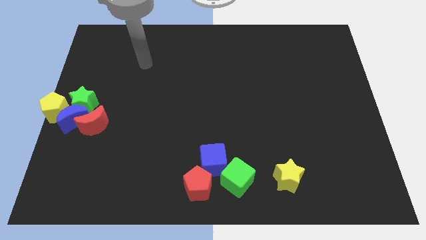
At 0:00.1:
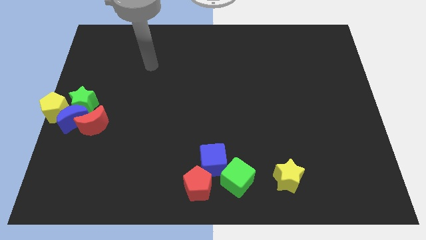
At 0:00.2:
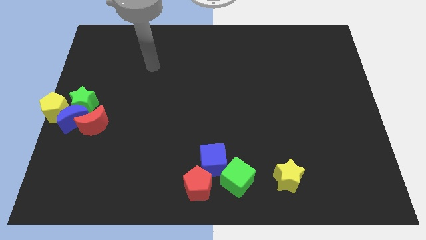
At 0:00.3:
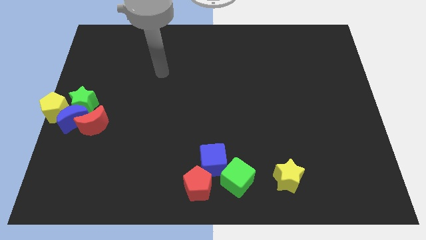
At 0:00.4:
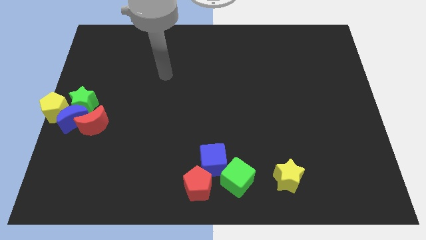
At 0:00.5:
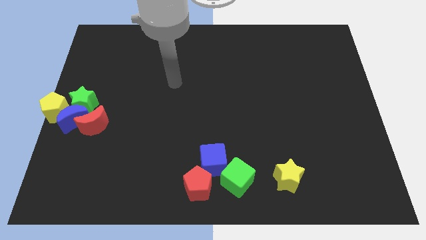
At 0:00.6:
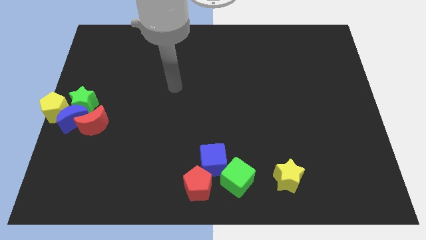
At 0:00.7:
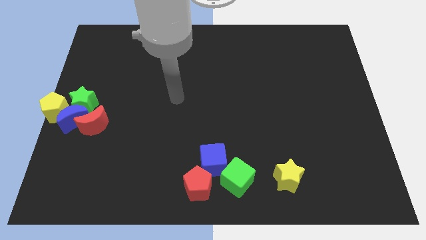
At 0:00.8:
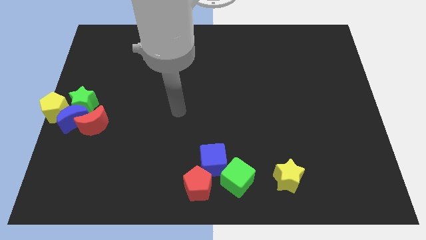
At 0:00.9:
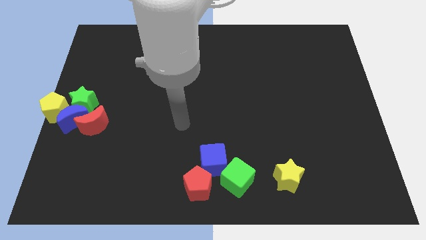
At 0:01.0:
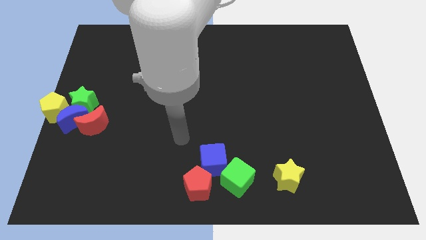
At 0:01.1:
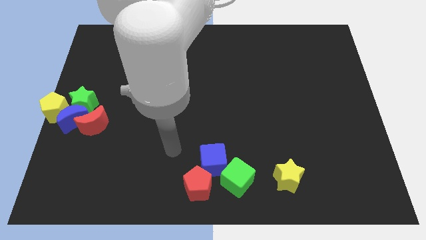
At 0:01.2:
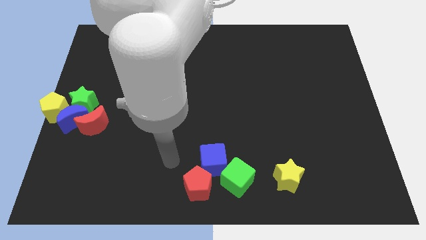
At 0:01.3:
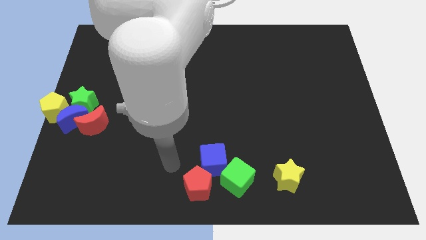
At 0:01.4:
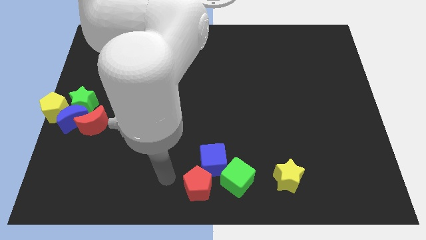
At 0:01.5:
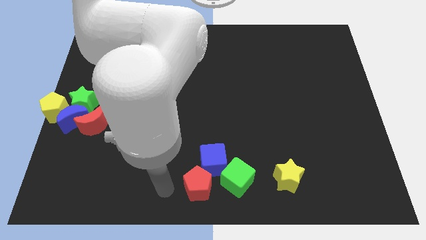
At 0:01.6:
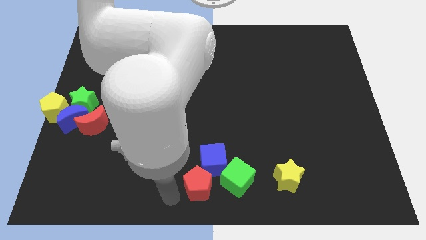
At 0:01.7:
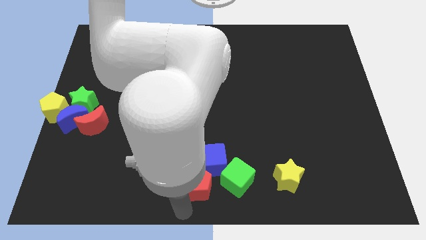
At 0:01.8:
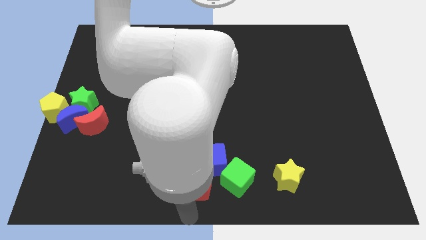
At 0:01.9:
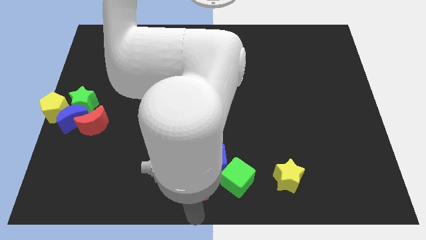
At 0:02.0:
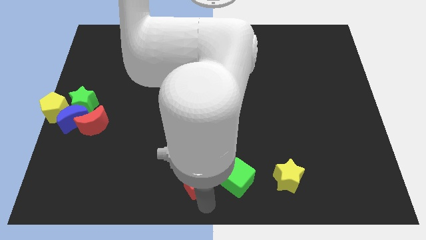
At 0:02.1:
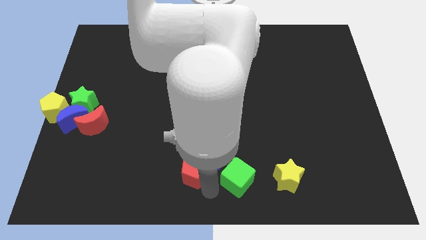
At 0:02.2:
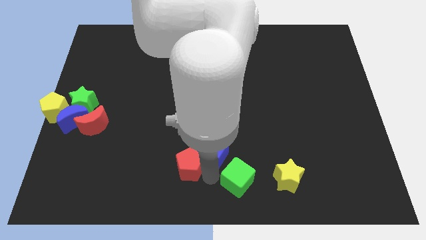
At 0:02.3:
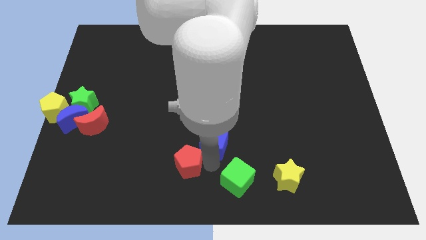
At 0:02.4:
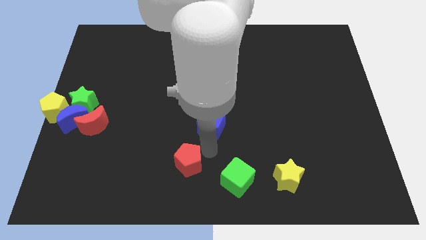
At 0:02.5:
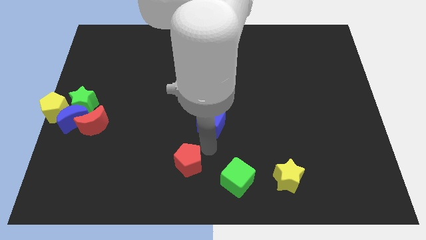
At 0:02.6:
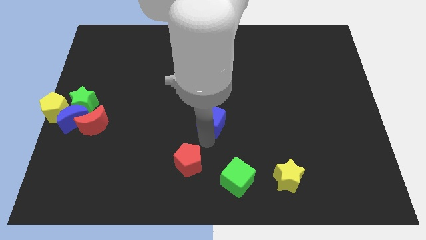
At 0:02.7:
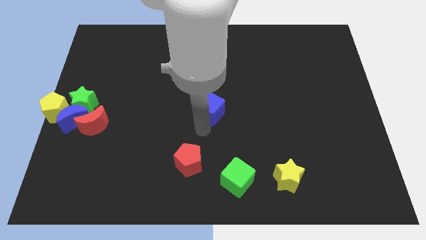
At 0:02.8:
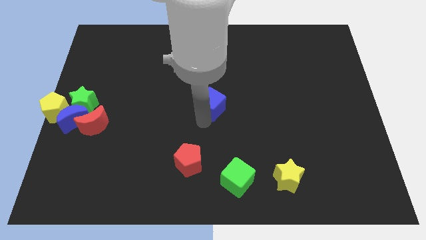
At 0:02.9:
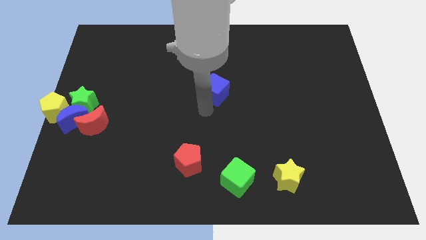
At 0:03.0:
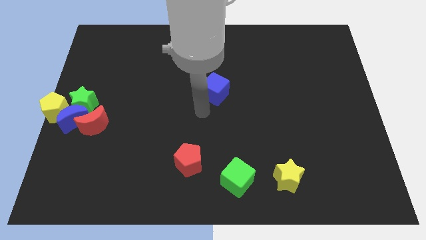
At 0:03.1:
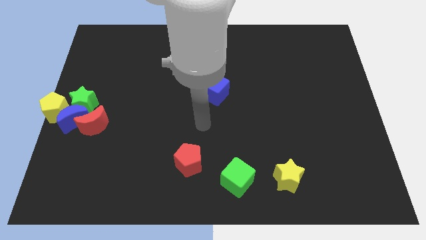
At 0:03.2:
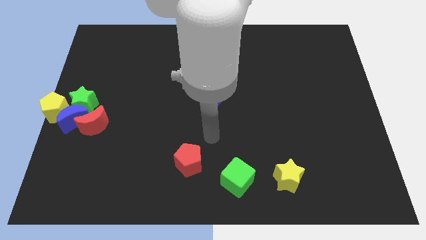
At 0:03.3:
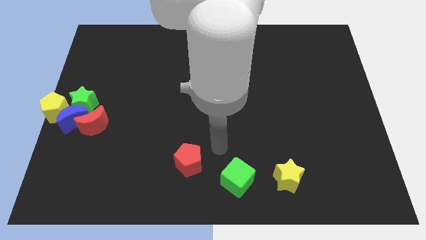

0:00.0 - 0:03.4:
separate the blue cube from the group of blocks

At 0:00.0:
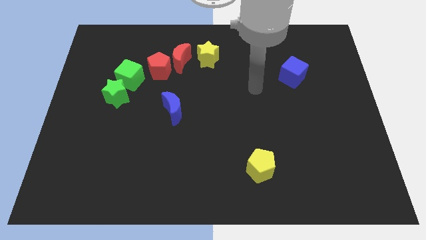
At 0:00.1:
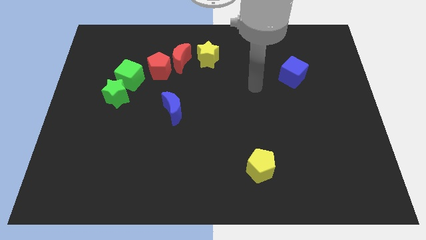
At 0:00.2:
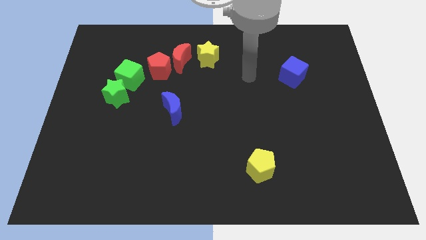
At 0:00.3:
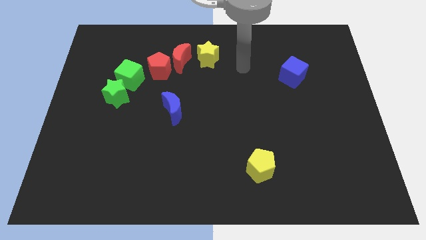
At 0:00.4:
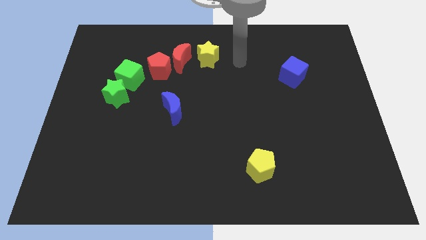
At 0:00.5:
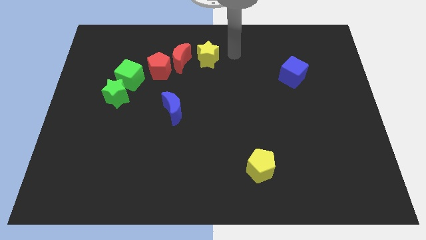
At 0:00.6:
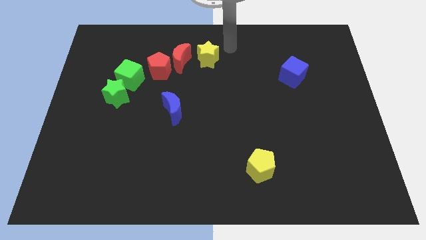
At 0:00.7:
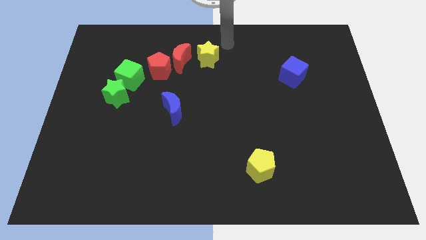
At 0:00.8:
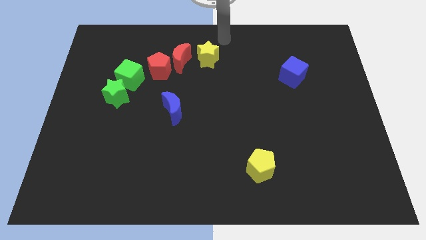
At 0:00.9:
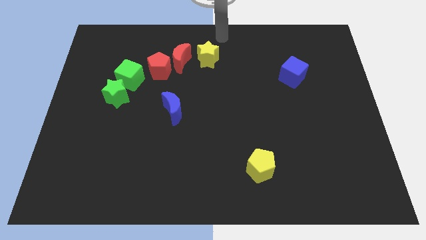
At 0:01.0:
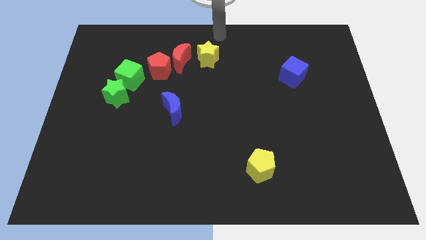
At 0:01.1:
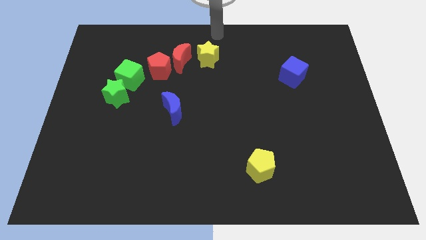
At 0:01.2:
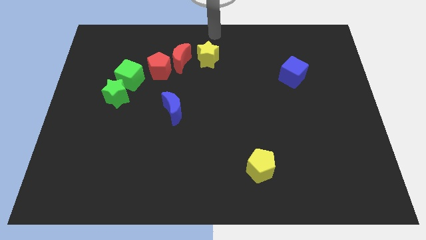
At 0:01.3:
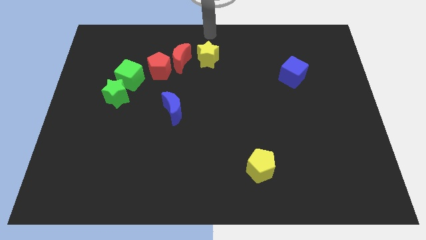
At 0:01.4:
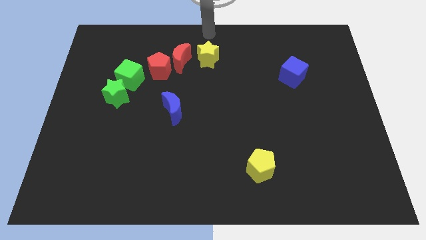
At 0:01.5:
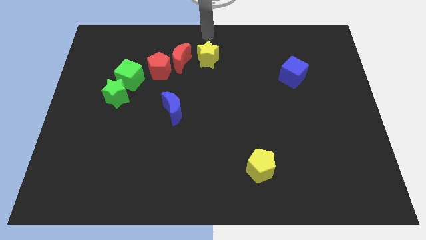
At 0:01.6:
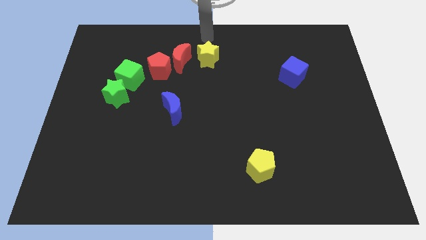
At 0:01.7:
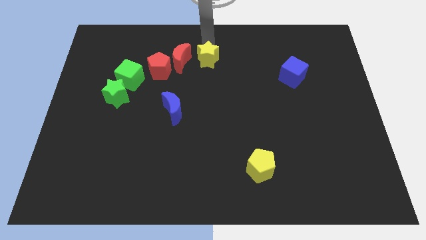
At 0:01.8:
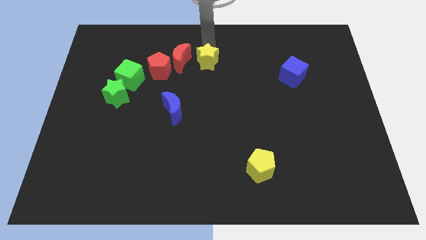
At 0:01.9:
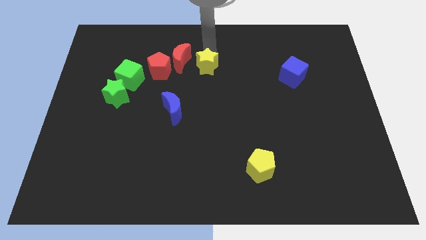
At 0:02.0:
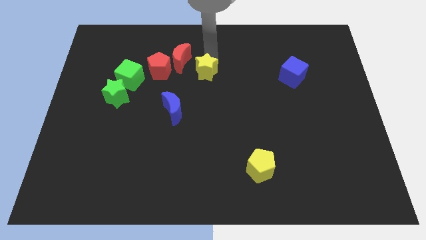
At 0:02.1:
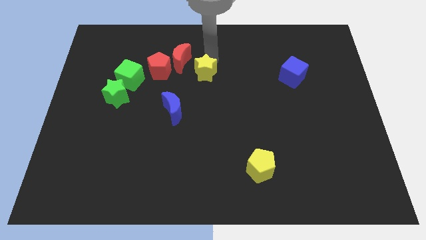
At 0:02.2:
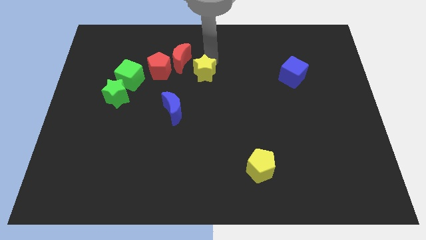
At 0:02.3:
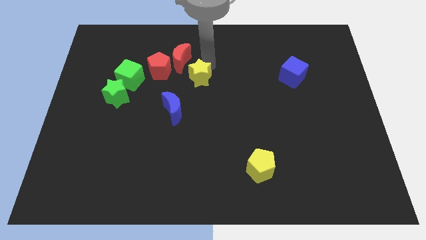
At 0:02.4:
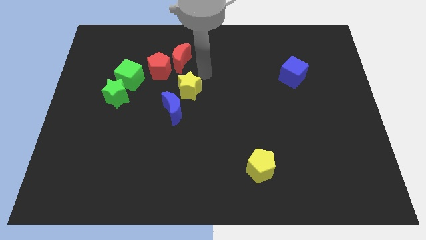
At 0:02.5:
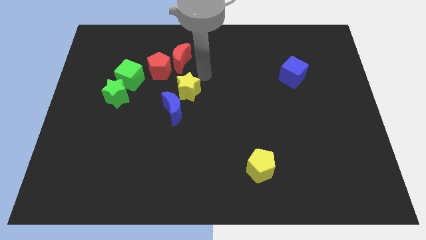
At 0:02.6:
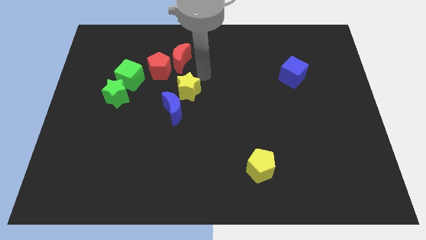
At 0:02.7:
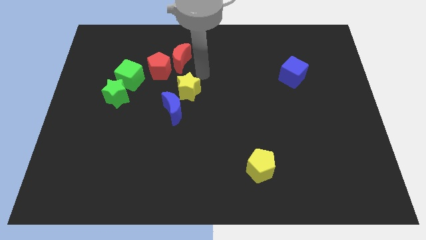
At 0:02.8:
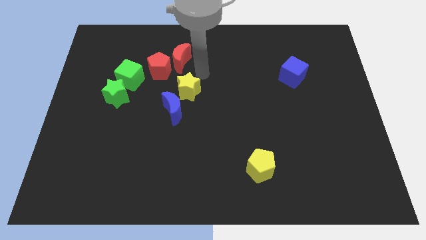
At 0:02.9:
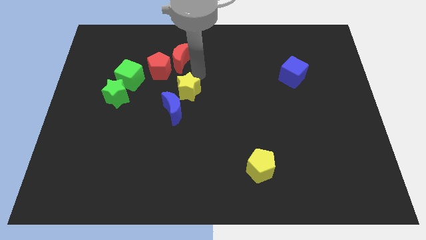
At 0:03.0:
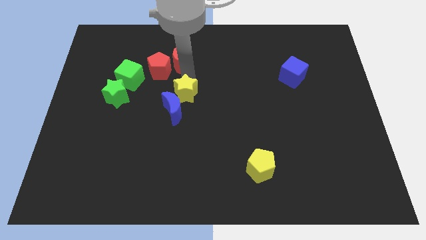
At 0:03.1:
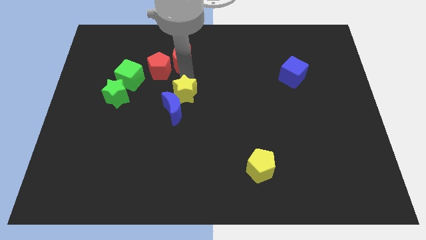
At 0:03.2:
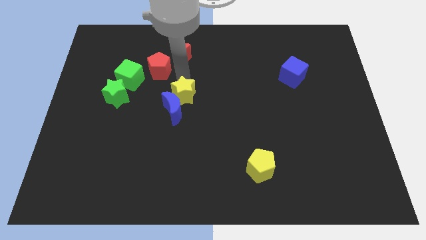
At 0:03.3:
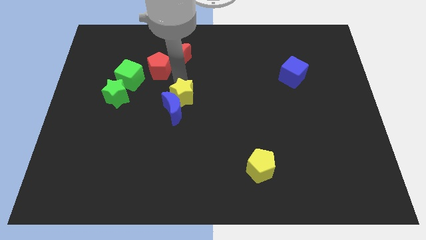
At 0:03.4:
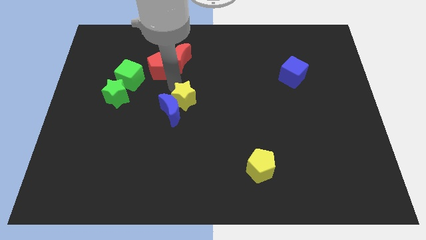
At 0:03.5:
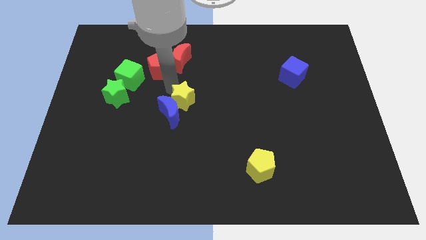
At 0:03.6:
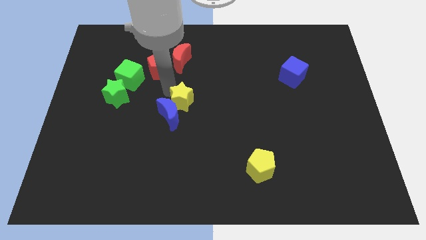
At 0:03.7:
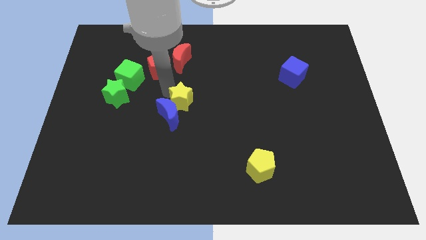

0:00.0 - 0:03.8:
place the yellow star above the blue crescent

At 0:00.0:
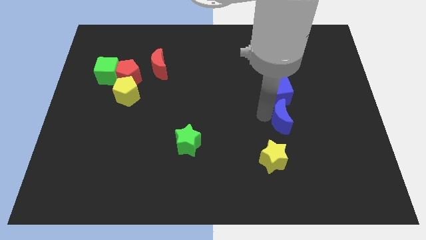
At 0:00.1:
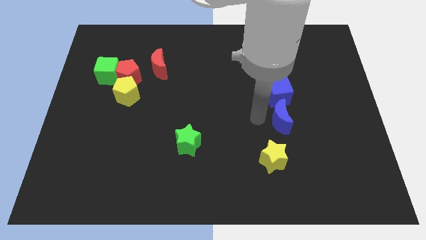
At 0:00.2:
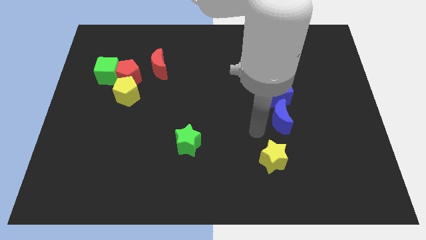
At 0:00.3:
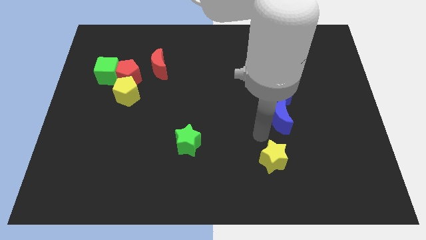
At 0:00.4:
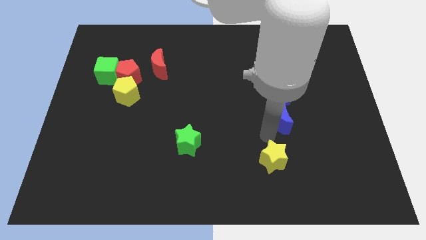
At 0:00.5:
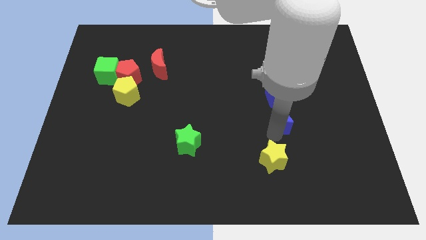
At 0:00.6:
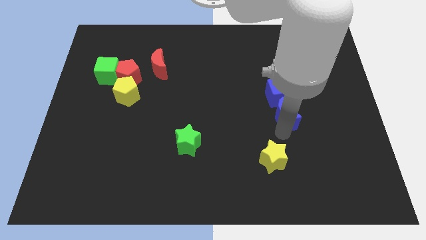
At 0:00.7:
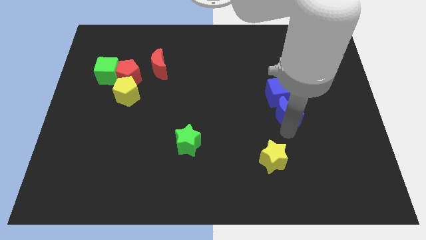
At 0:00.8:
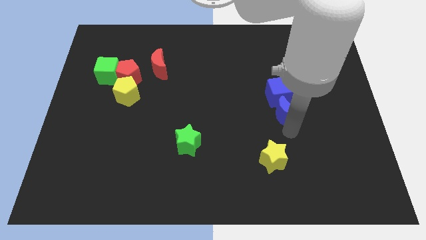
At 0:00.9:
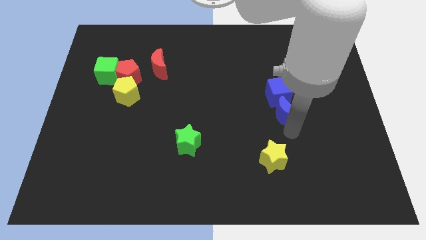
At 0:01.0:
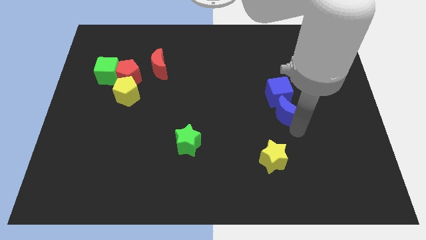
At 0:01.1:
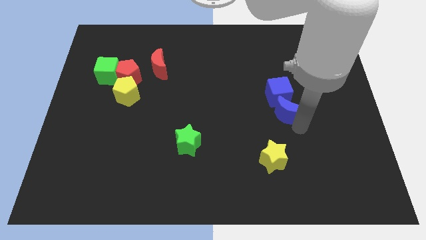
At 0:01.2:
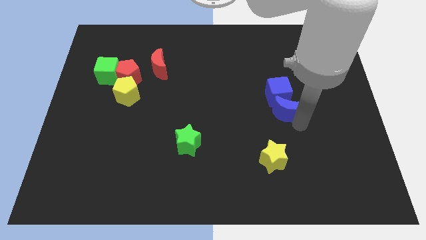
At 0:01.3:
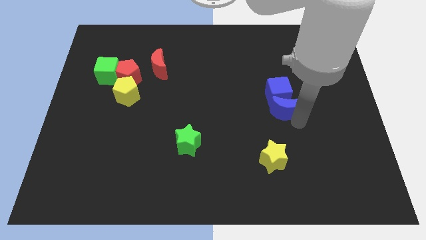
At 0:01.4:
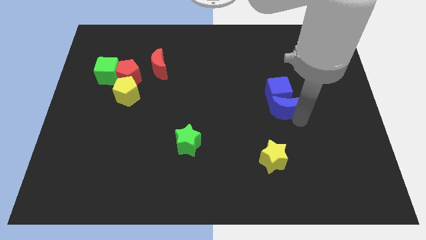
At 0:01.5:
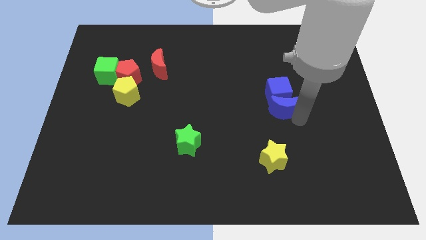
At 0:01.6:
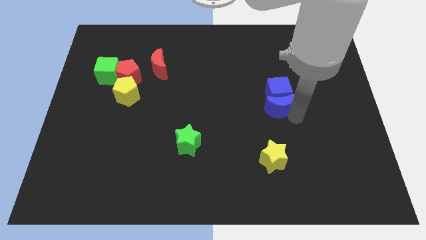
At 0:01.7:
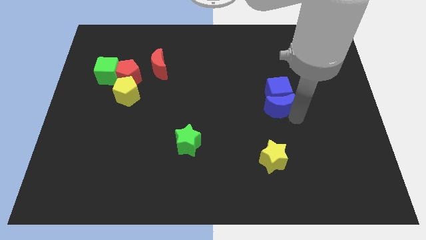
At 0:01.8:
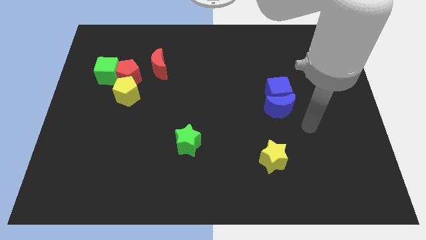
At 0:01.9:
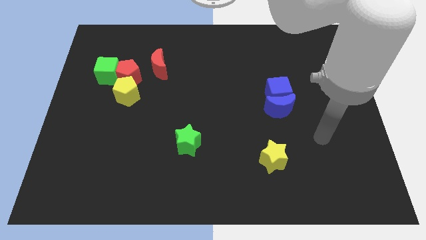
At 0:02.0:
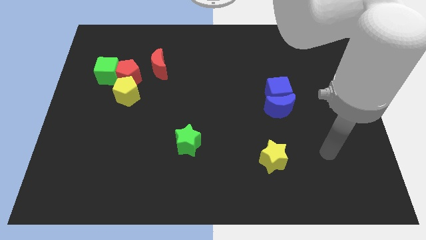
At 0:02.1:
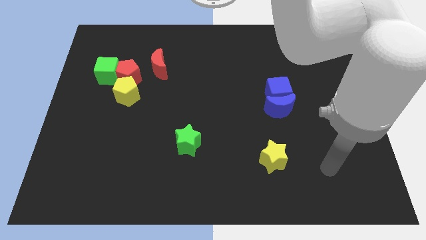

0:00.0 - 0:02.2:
push the blue moon into the blue cube
